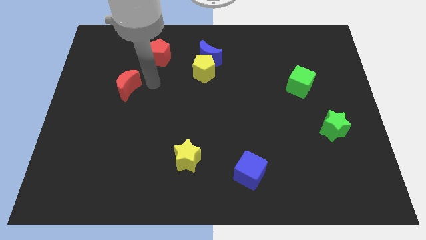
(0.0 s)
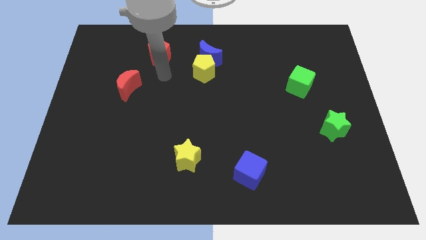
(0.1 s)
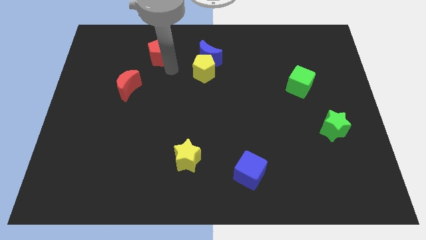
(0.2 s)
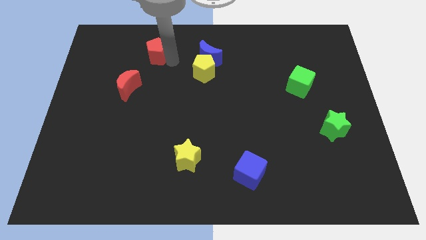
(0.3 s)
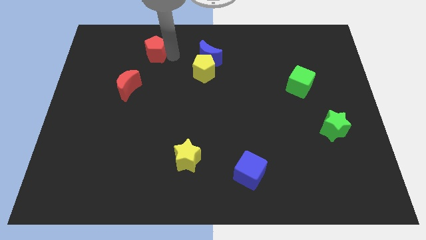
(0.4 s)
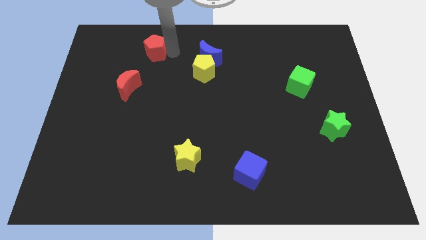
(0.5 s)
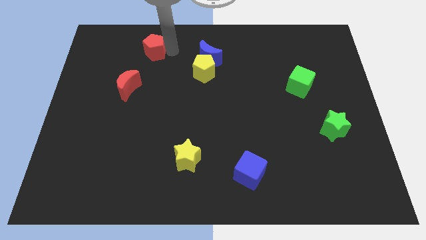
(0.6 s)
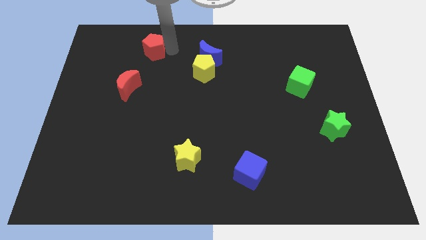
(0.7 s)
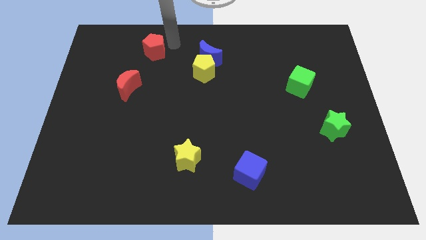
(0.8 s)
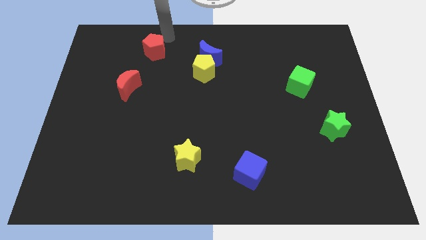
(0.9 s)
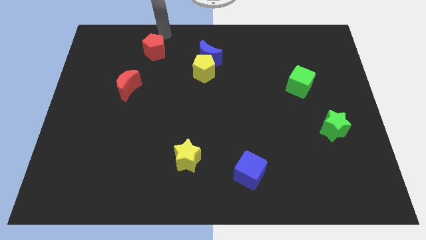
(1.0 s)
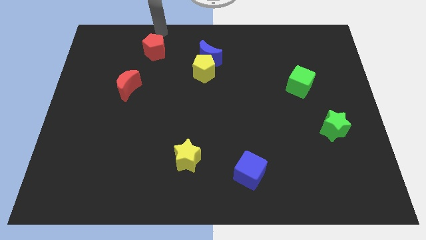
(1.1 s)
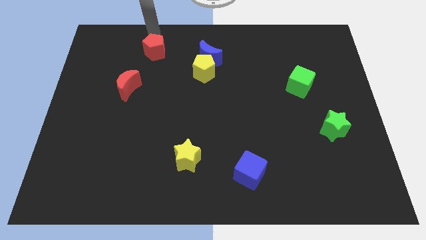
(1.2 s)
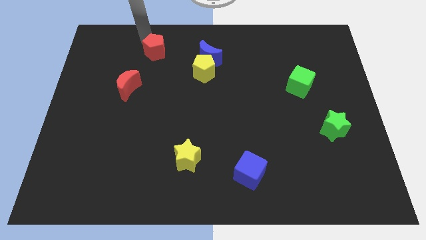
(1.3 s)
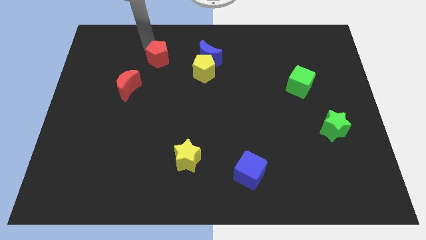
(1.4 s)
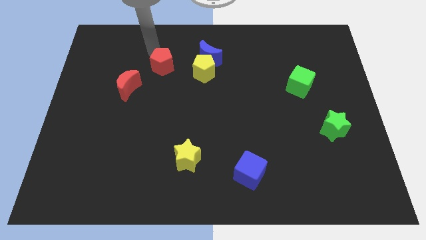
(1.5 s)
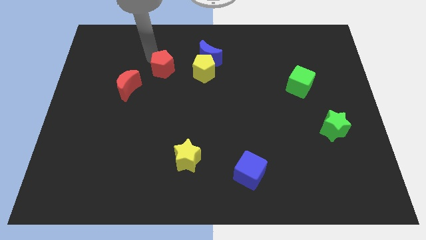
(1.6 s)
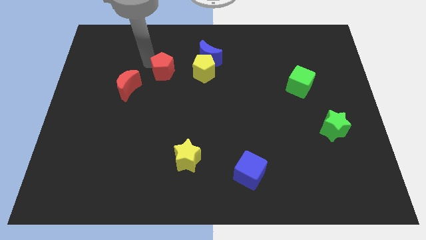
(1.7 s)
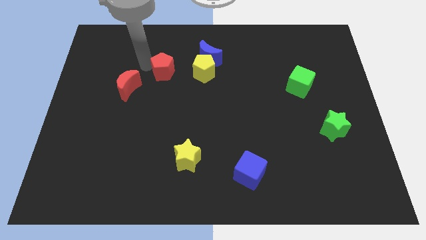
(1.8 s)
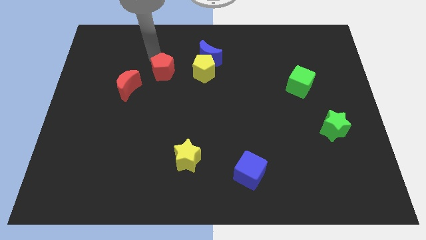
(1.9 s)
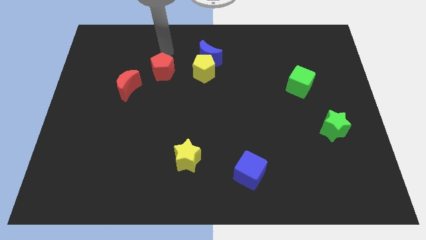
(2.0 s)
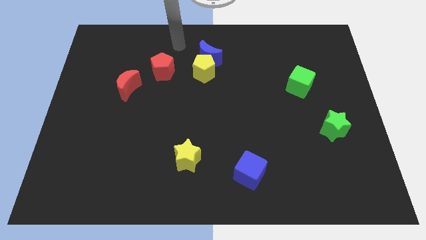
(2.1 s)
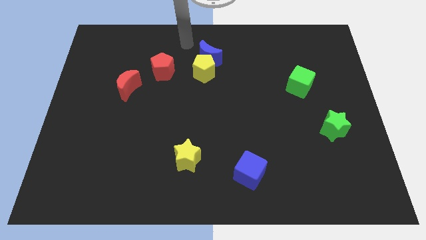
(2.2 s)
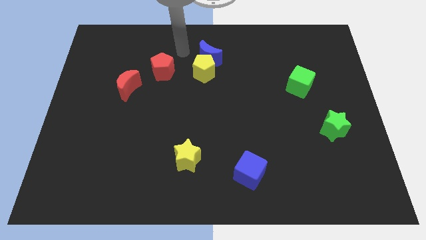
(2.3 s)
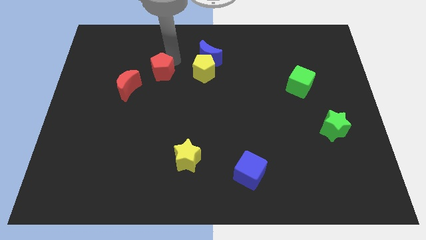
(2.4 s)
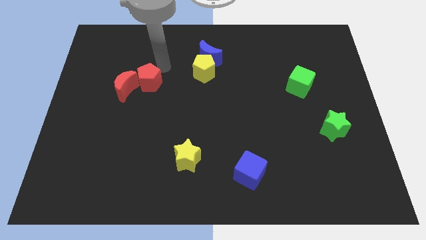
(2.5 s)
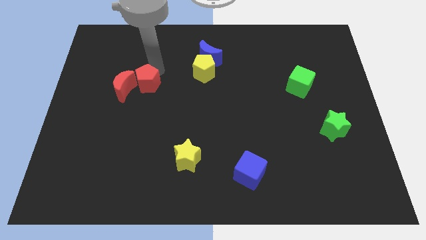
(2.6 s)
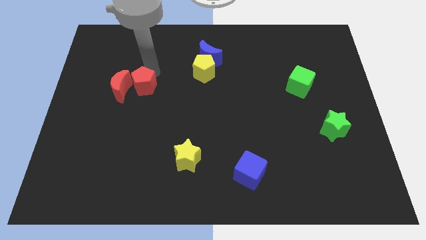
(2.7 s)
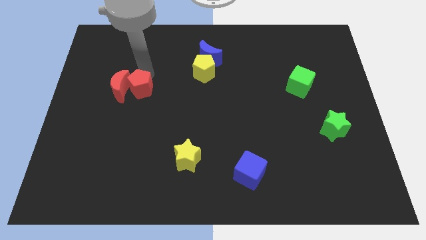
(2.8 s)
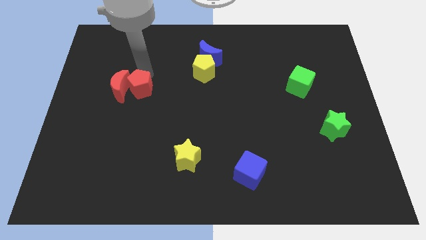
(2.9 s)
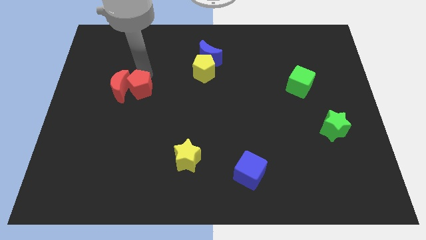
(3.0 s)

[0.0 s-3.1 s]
push the red pentagon to the top right side of the red crescent

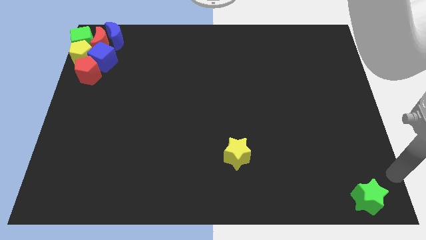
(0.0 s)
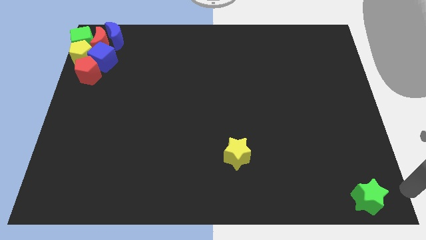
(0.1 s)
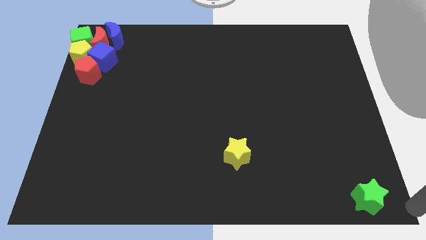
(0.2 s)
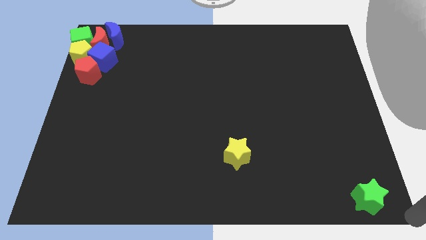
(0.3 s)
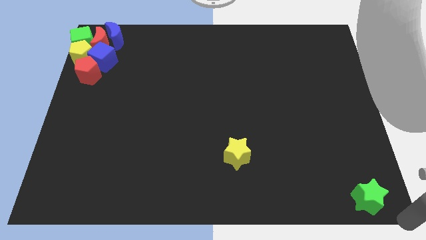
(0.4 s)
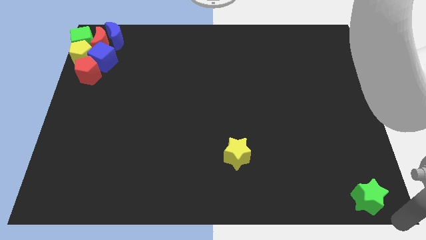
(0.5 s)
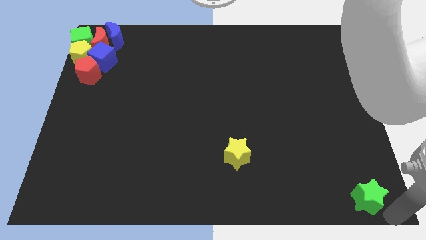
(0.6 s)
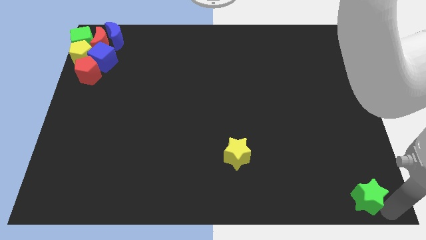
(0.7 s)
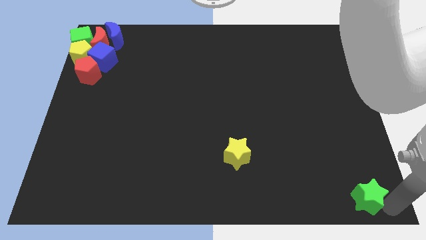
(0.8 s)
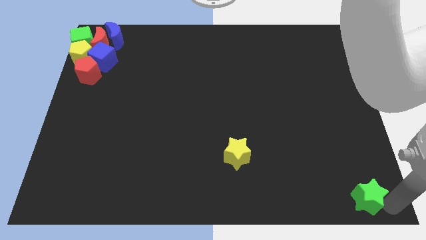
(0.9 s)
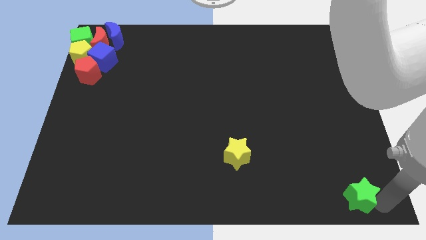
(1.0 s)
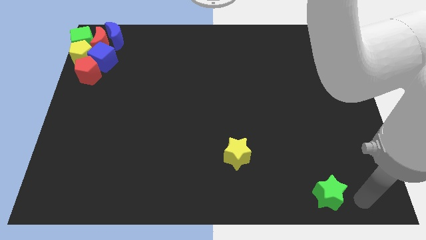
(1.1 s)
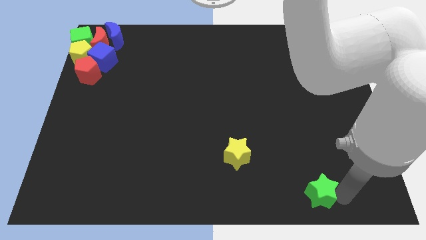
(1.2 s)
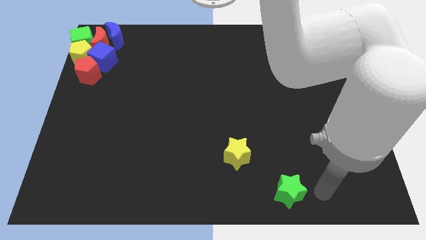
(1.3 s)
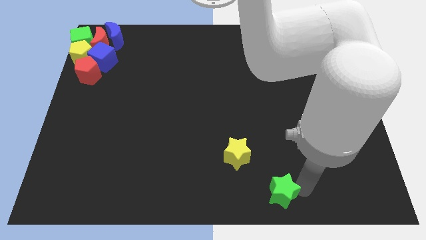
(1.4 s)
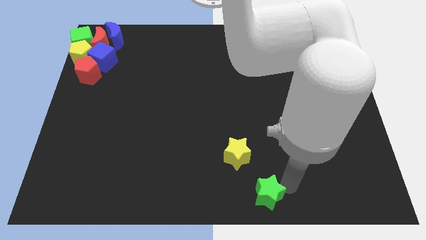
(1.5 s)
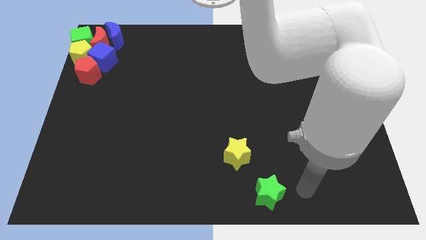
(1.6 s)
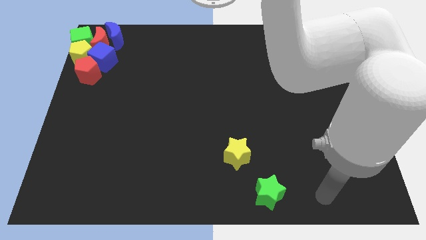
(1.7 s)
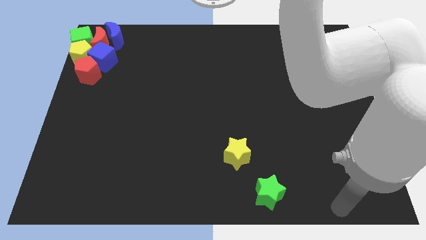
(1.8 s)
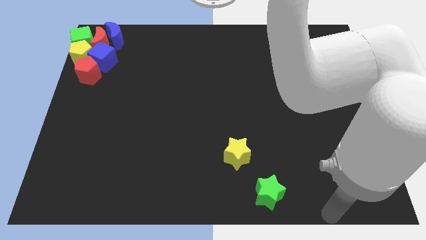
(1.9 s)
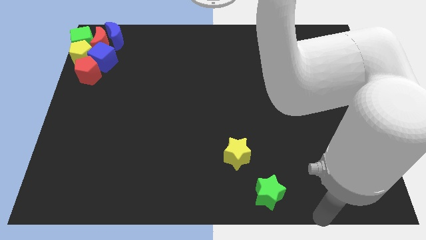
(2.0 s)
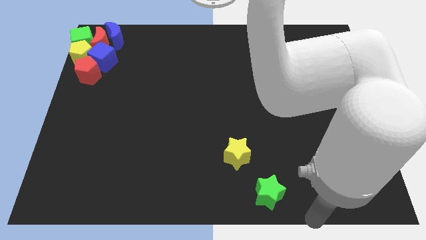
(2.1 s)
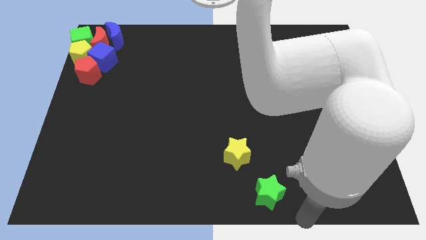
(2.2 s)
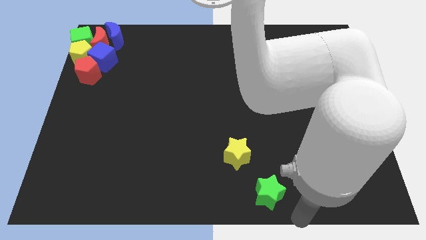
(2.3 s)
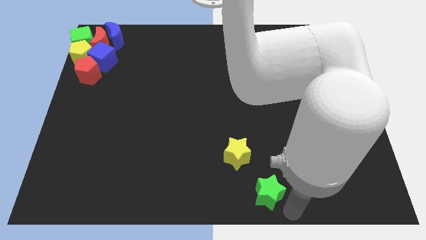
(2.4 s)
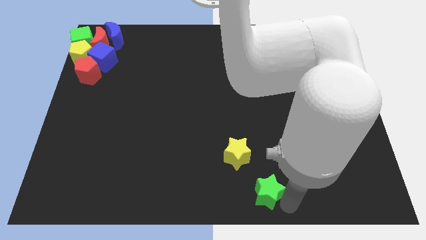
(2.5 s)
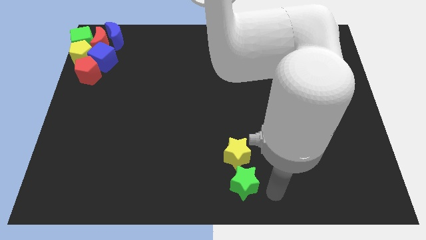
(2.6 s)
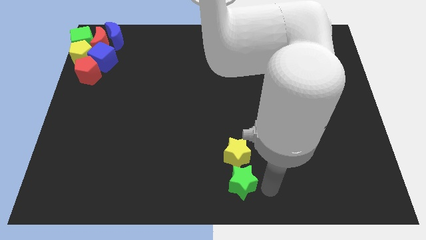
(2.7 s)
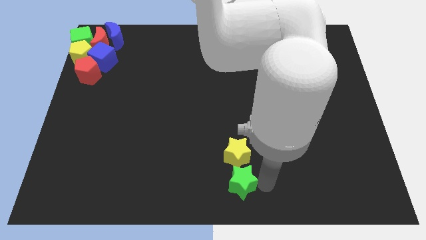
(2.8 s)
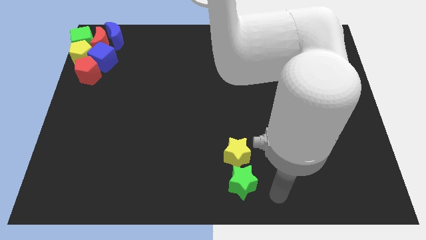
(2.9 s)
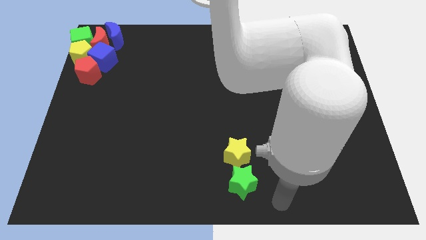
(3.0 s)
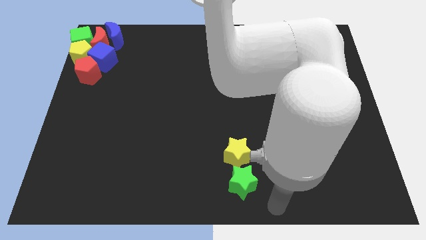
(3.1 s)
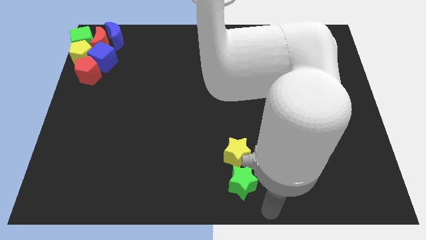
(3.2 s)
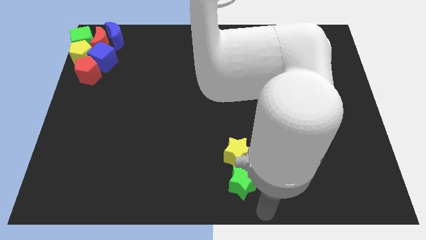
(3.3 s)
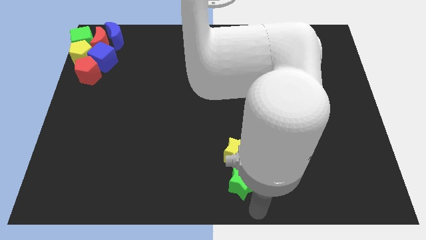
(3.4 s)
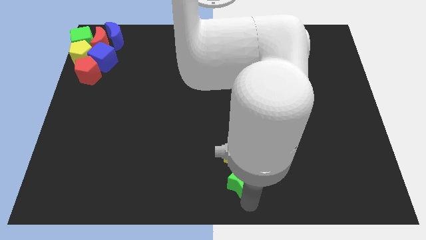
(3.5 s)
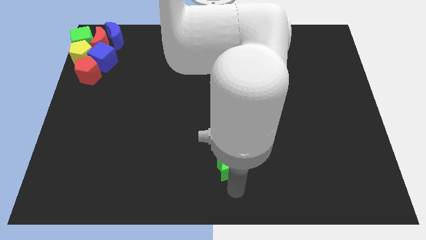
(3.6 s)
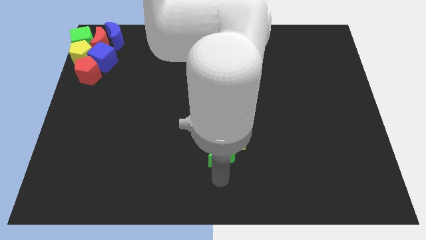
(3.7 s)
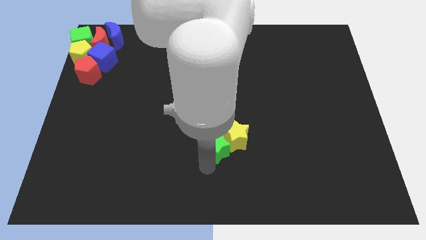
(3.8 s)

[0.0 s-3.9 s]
push the green star into the yellow star

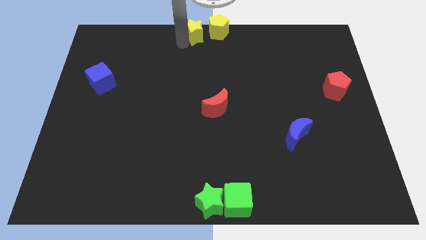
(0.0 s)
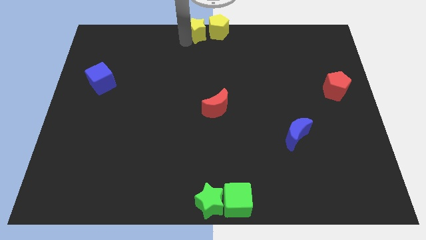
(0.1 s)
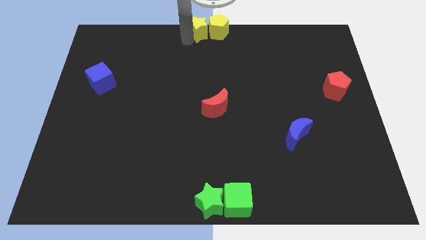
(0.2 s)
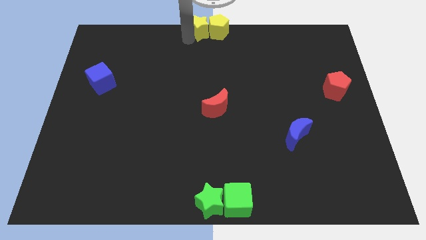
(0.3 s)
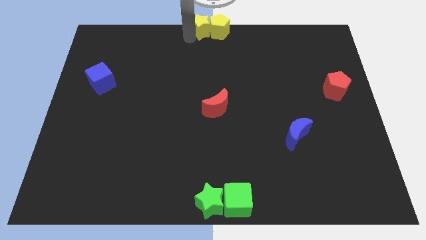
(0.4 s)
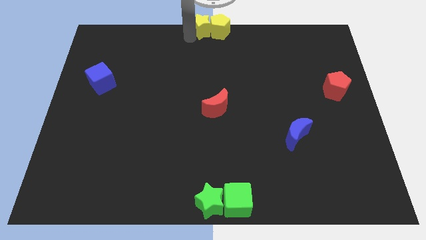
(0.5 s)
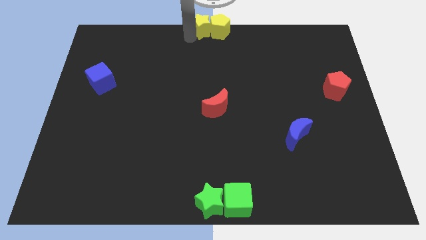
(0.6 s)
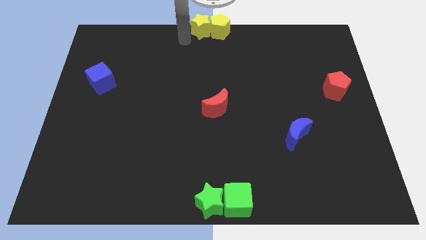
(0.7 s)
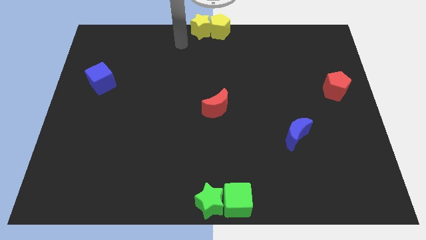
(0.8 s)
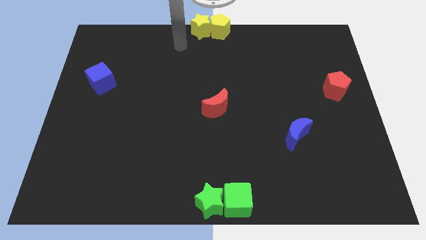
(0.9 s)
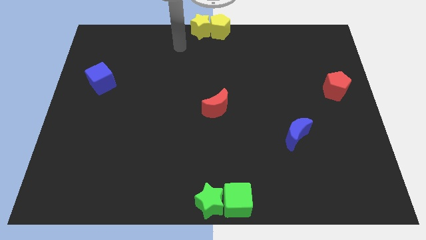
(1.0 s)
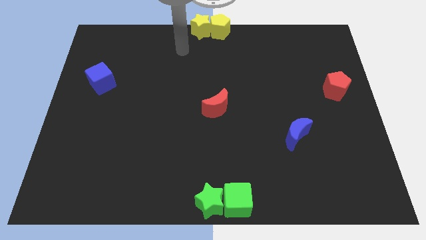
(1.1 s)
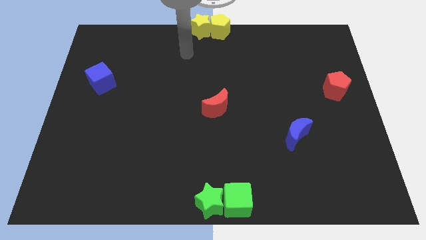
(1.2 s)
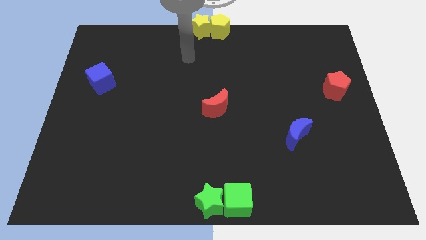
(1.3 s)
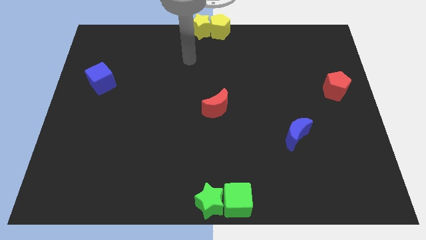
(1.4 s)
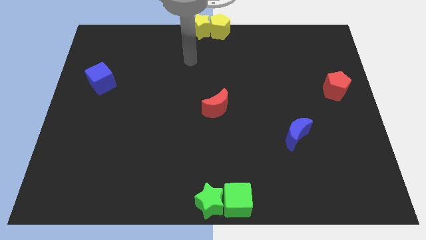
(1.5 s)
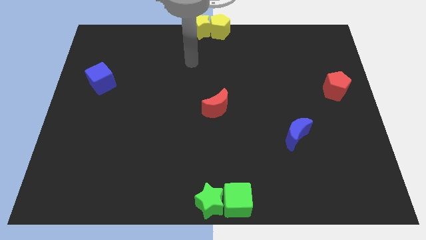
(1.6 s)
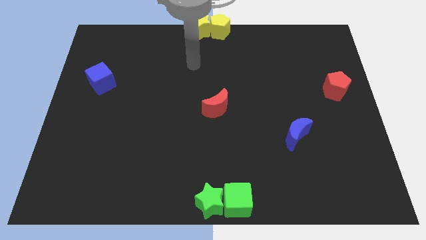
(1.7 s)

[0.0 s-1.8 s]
put the yellow blocks together

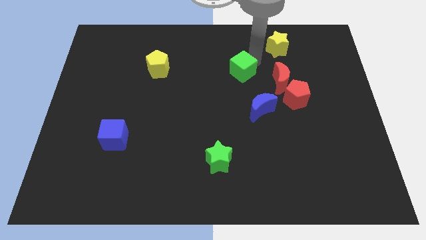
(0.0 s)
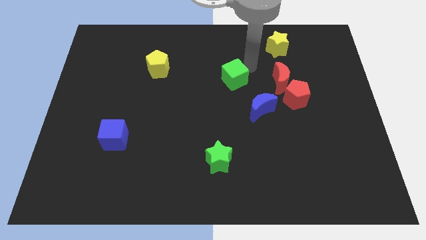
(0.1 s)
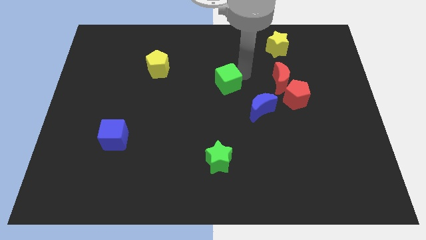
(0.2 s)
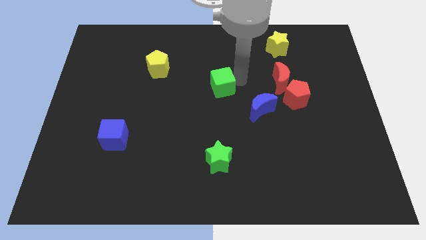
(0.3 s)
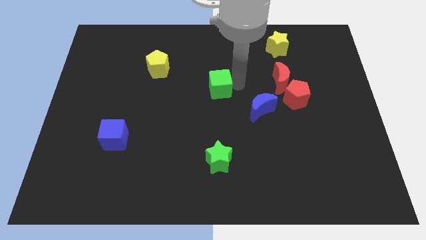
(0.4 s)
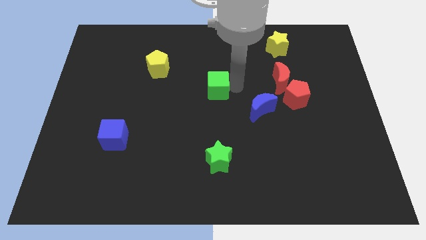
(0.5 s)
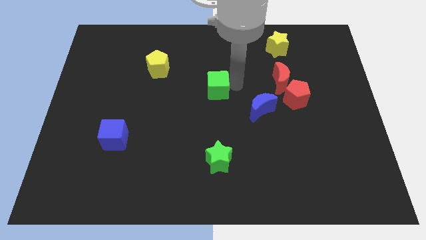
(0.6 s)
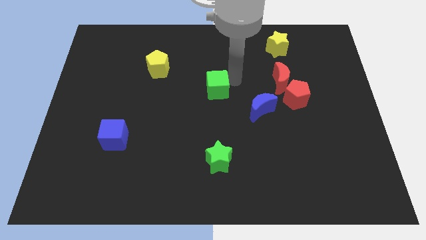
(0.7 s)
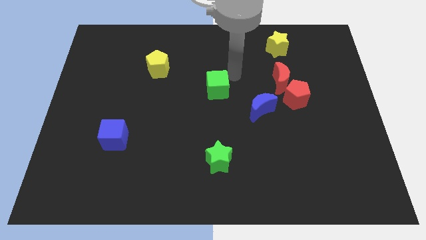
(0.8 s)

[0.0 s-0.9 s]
push the green cube downward
